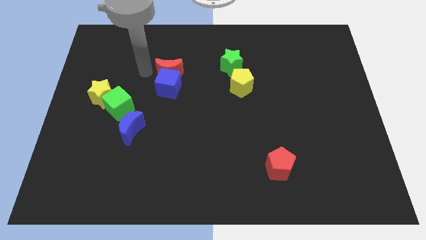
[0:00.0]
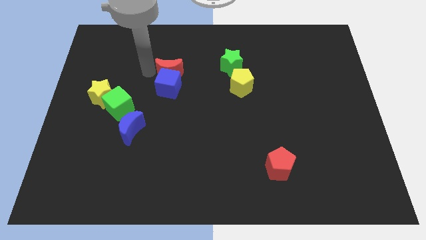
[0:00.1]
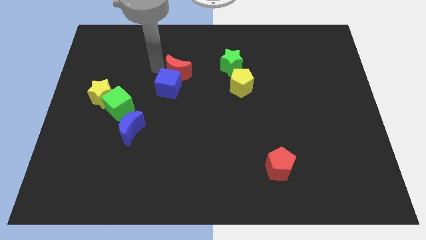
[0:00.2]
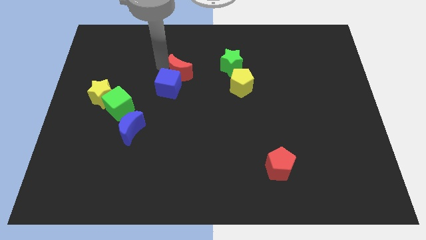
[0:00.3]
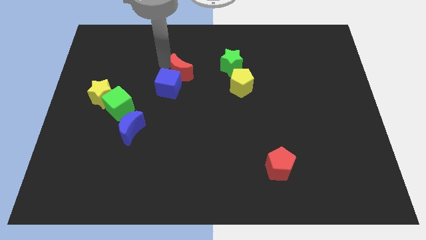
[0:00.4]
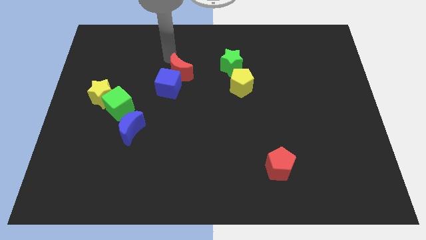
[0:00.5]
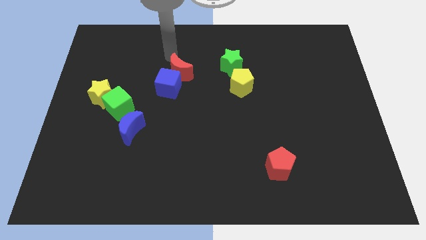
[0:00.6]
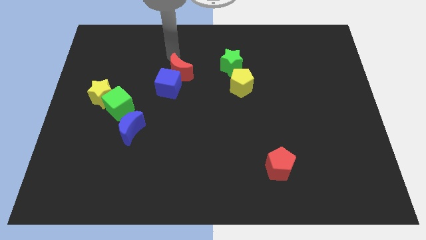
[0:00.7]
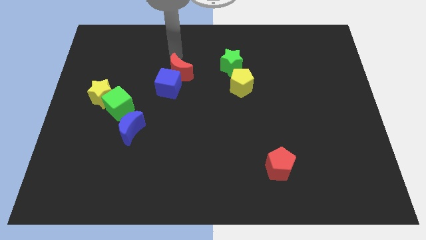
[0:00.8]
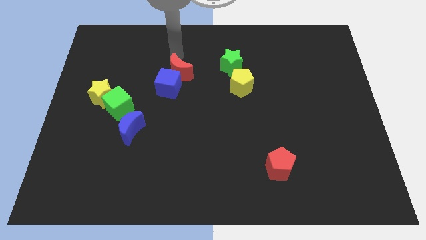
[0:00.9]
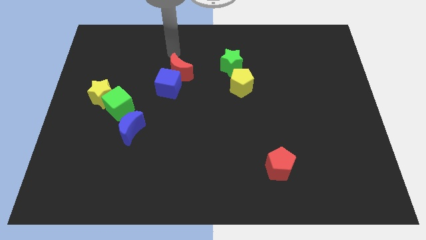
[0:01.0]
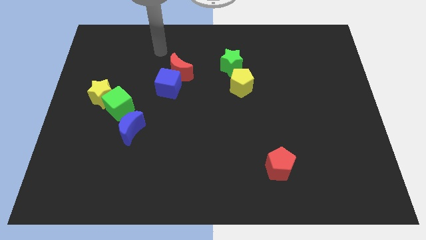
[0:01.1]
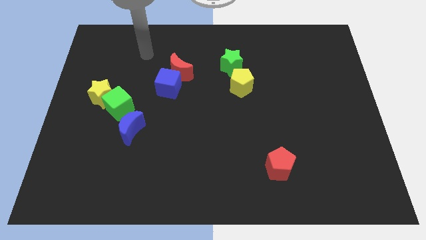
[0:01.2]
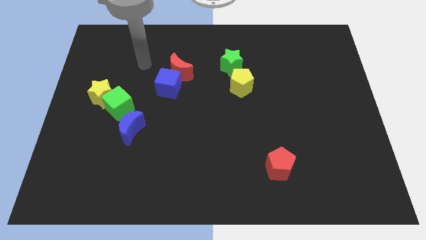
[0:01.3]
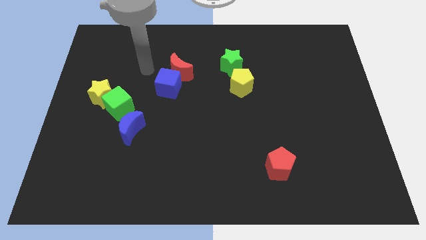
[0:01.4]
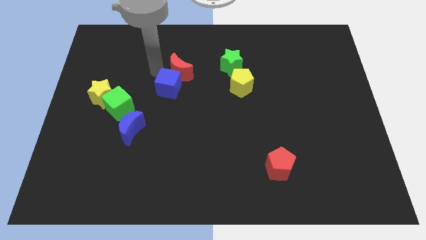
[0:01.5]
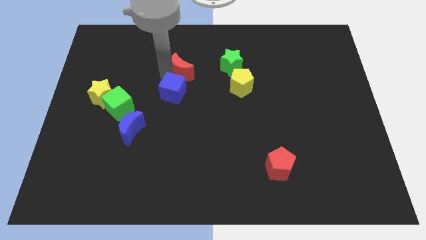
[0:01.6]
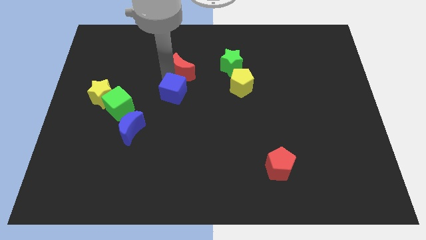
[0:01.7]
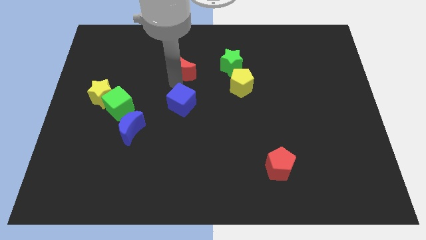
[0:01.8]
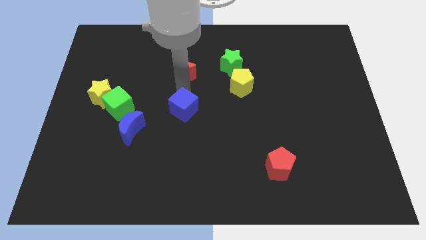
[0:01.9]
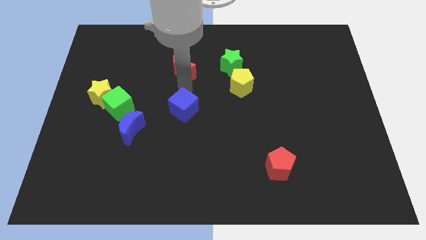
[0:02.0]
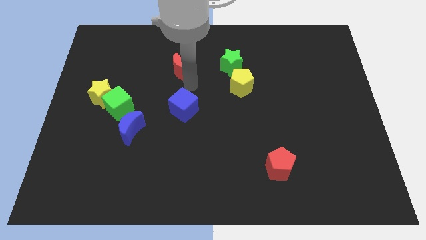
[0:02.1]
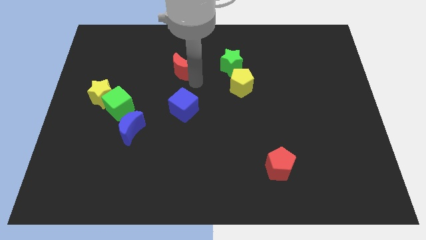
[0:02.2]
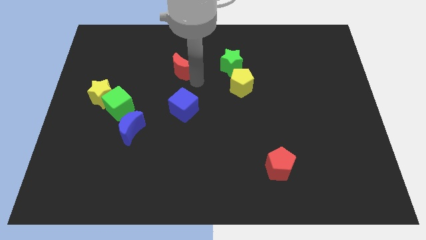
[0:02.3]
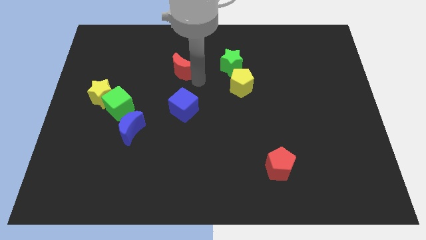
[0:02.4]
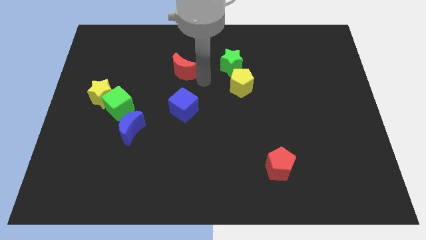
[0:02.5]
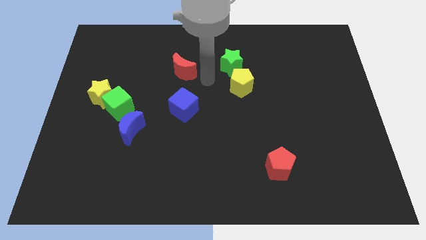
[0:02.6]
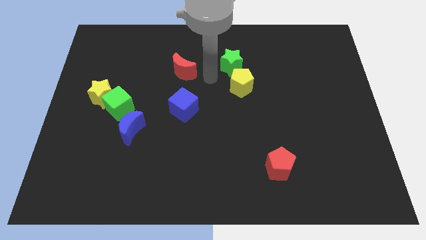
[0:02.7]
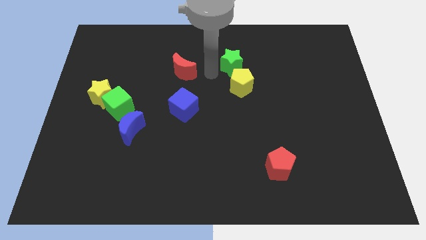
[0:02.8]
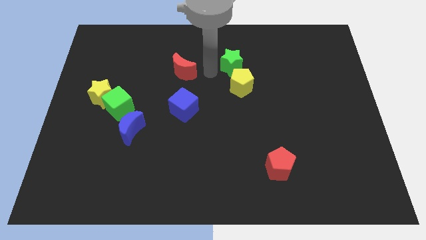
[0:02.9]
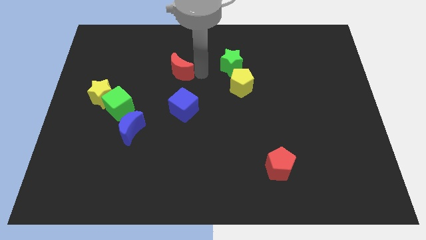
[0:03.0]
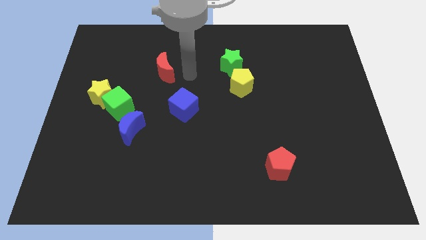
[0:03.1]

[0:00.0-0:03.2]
move the arm to the right side of the red moon

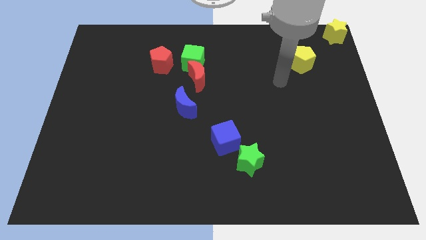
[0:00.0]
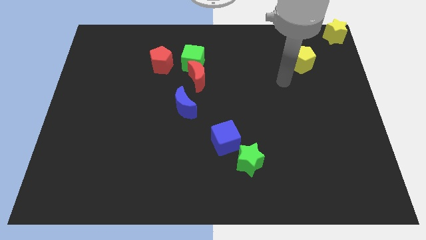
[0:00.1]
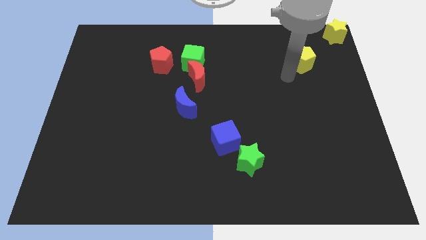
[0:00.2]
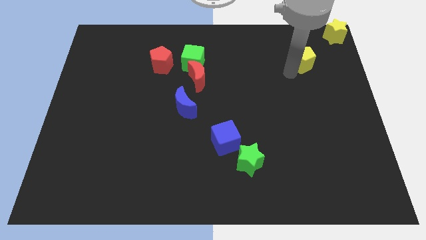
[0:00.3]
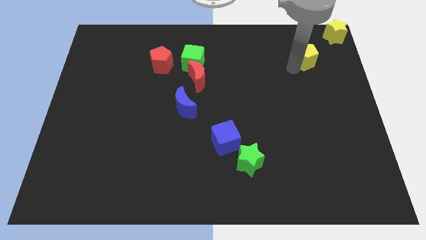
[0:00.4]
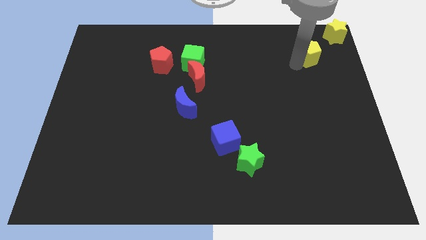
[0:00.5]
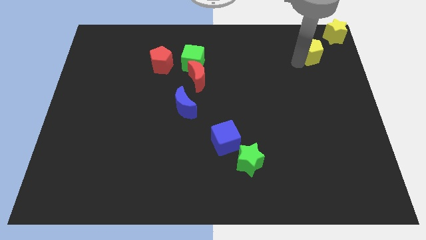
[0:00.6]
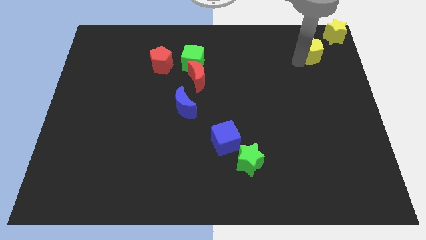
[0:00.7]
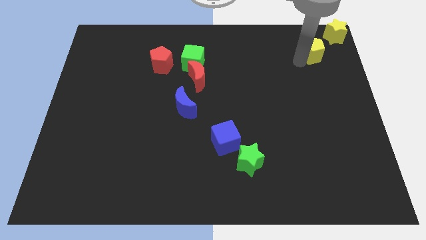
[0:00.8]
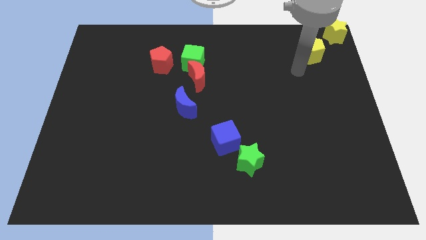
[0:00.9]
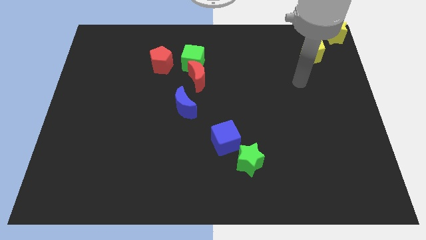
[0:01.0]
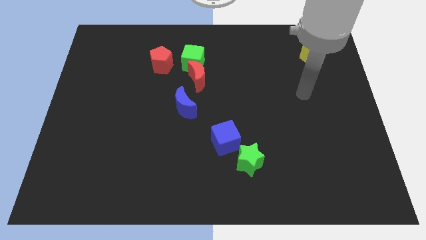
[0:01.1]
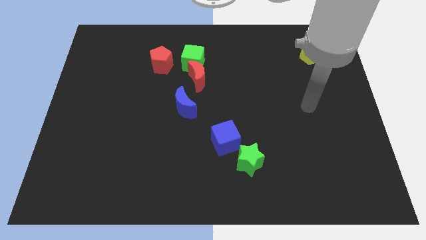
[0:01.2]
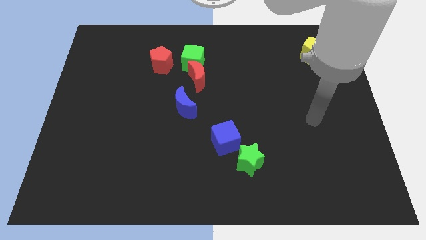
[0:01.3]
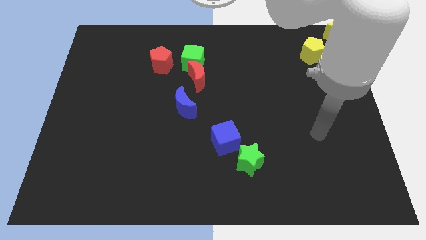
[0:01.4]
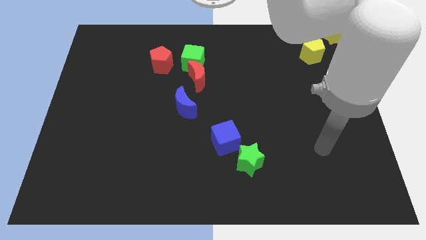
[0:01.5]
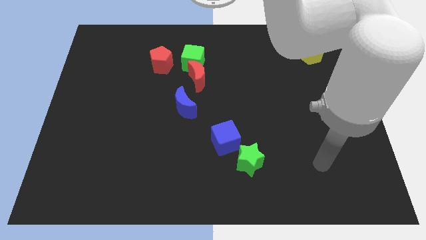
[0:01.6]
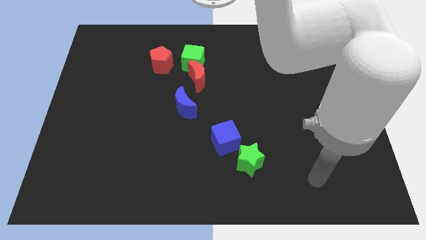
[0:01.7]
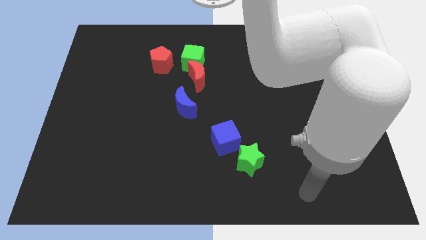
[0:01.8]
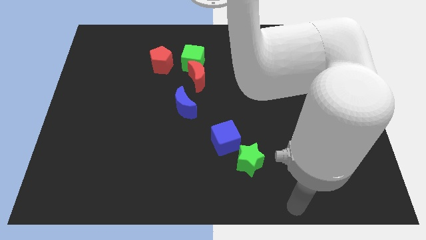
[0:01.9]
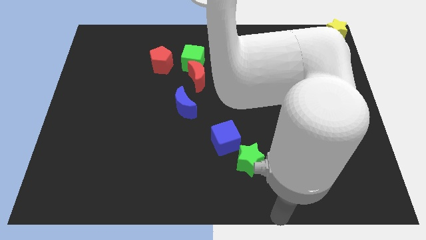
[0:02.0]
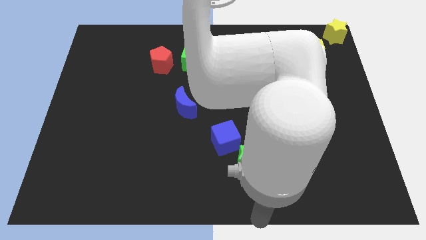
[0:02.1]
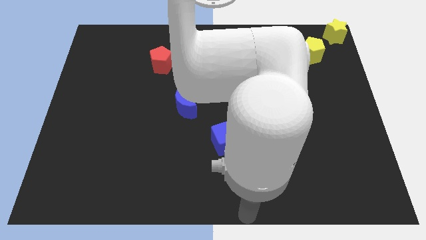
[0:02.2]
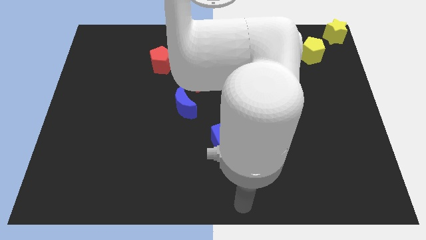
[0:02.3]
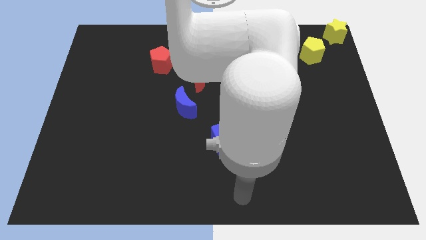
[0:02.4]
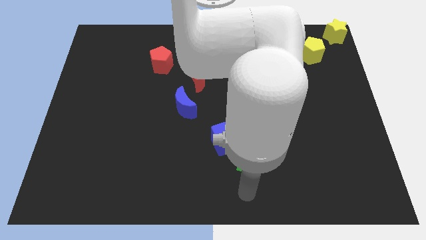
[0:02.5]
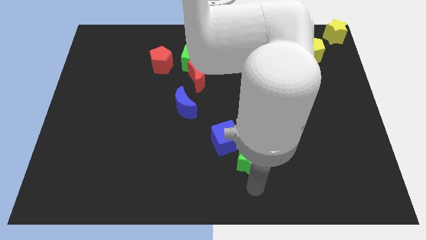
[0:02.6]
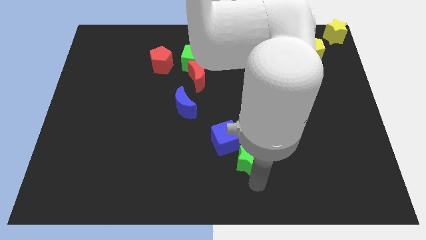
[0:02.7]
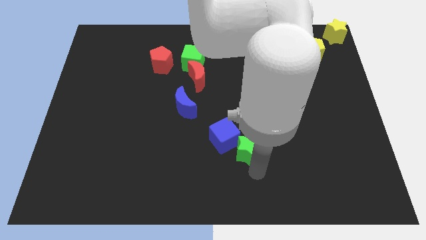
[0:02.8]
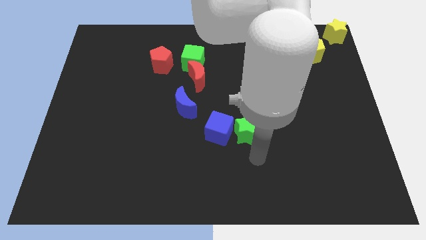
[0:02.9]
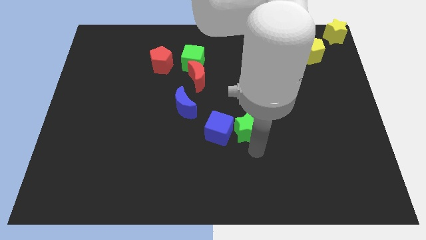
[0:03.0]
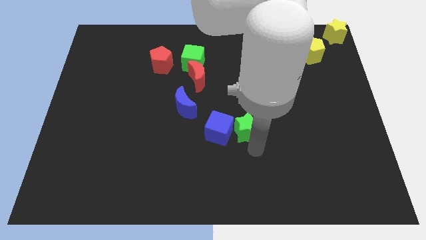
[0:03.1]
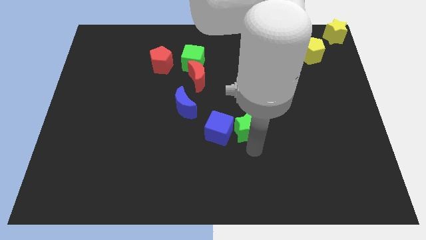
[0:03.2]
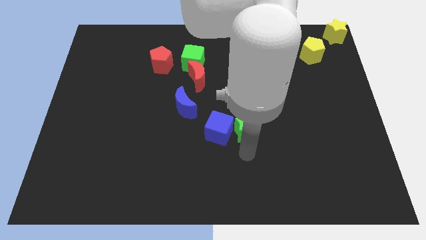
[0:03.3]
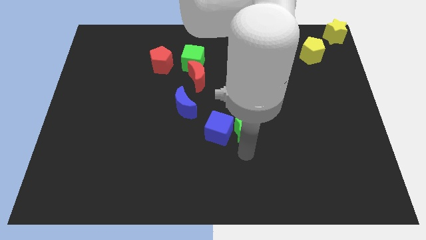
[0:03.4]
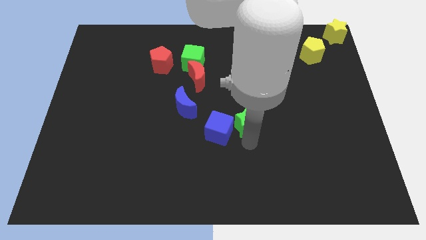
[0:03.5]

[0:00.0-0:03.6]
move the green star right to the blue cube

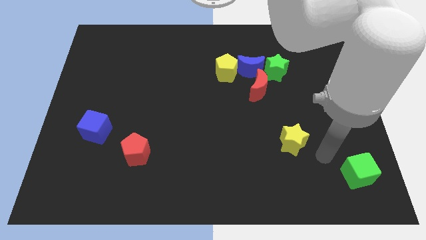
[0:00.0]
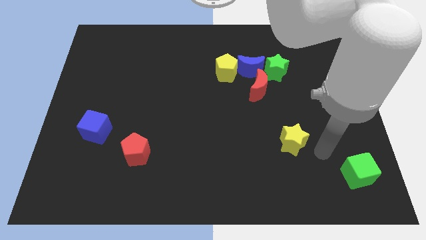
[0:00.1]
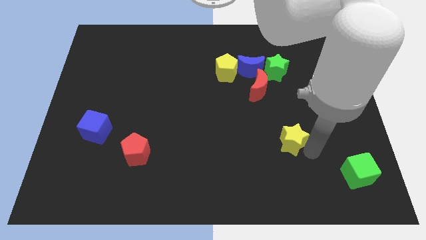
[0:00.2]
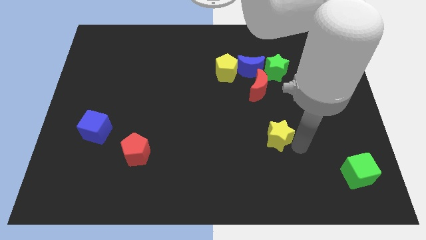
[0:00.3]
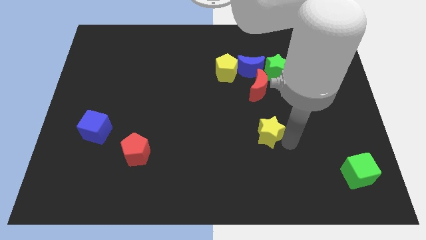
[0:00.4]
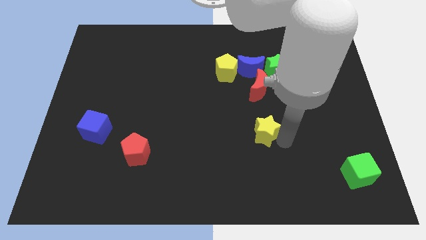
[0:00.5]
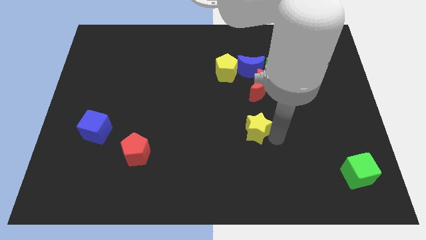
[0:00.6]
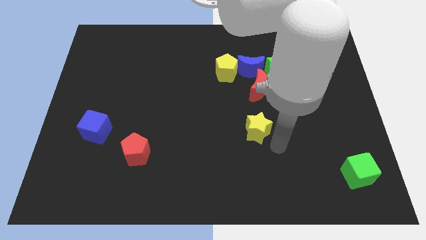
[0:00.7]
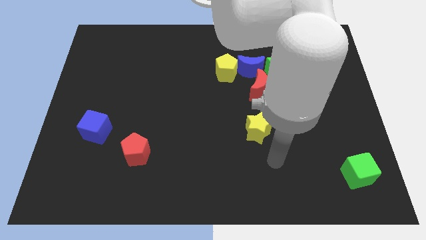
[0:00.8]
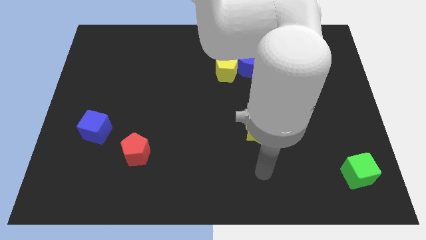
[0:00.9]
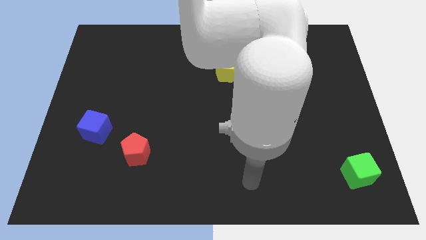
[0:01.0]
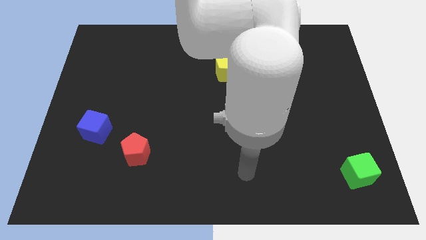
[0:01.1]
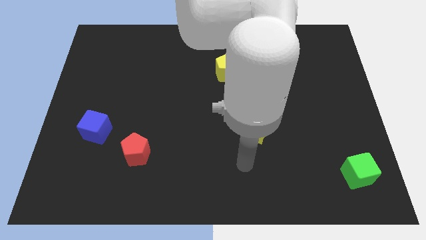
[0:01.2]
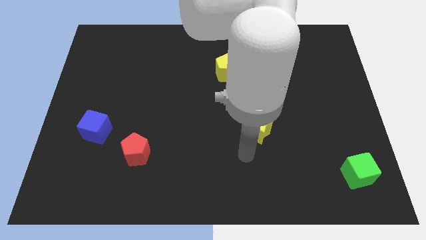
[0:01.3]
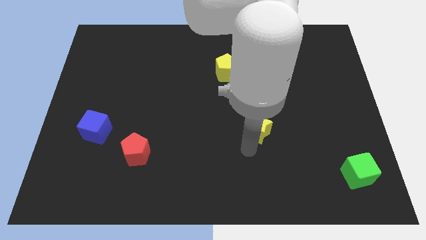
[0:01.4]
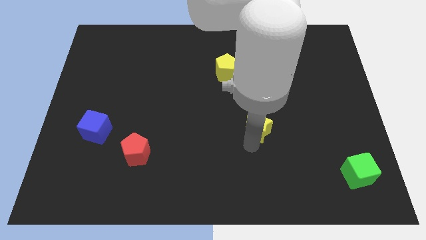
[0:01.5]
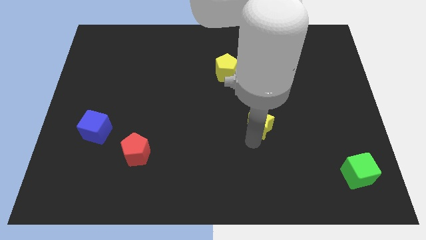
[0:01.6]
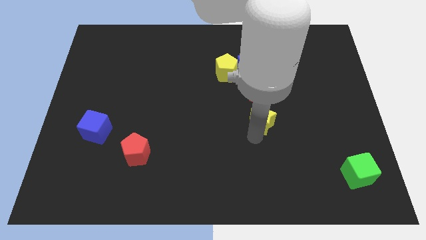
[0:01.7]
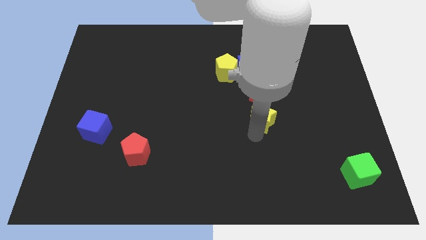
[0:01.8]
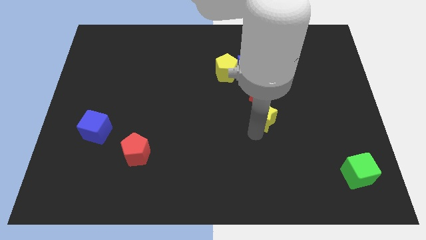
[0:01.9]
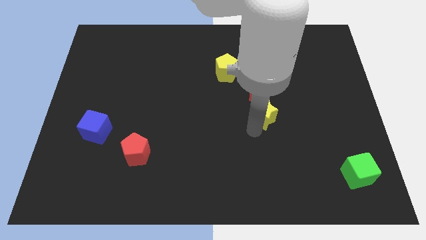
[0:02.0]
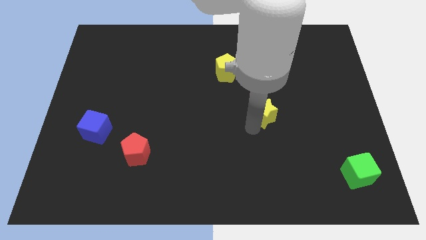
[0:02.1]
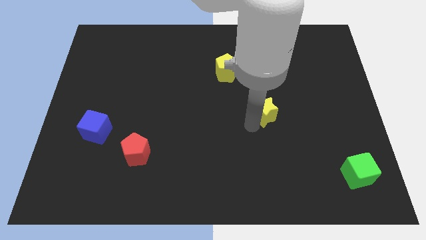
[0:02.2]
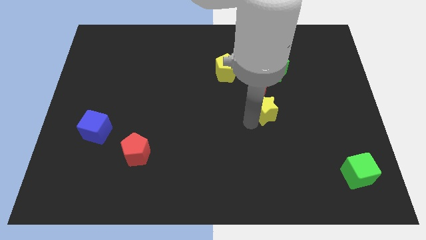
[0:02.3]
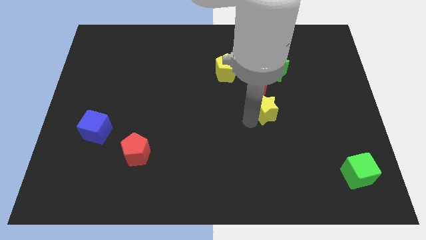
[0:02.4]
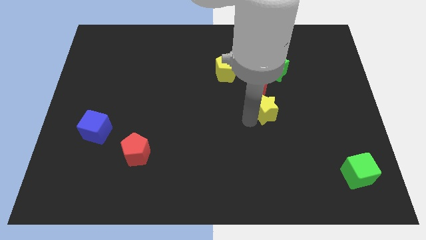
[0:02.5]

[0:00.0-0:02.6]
move the yellow star below the red moon
